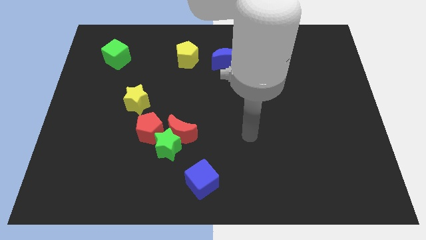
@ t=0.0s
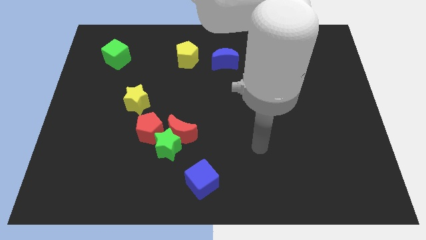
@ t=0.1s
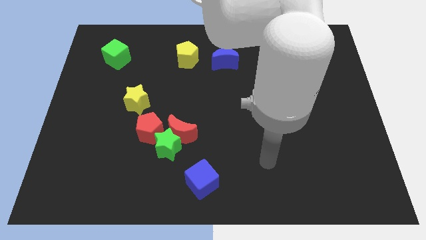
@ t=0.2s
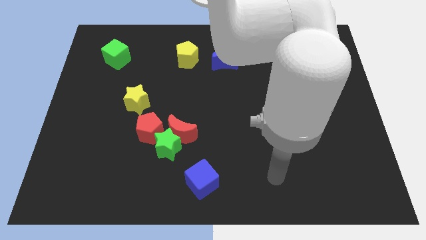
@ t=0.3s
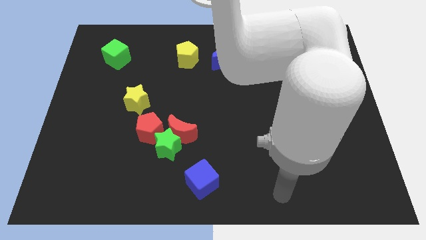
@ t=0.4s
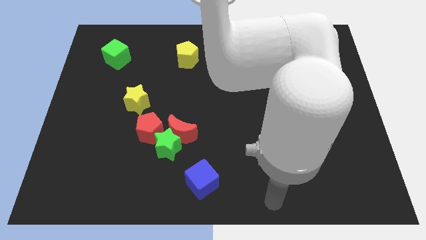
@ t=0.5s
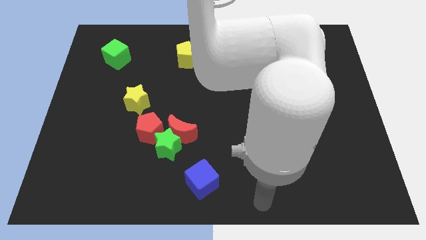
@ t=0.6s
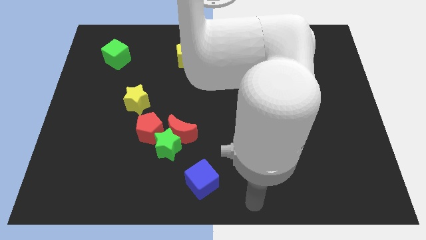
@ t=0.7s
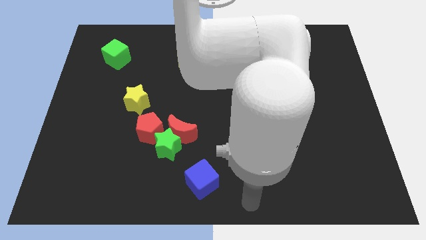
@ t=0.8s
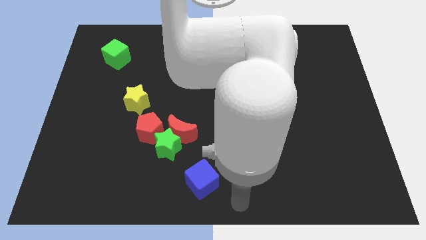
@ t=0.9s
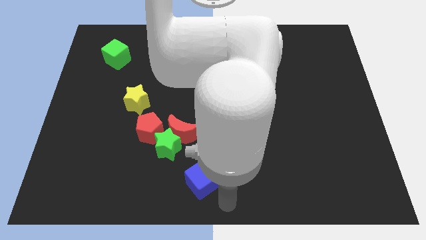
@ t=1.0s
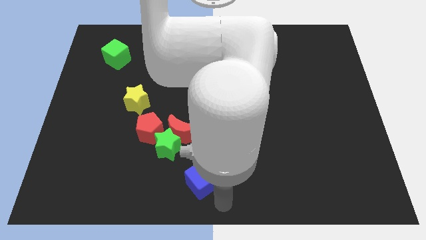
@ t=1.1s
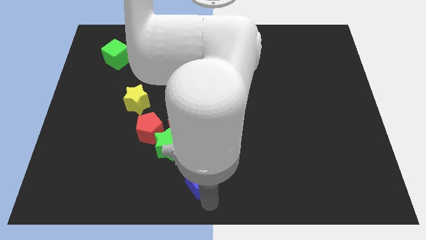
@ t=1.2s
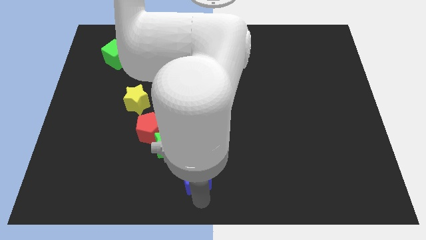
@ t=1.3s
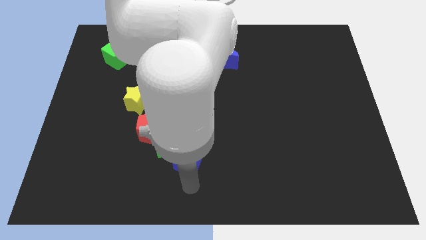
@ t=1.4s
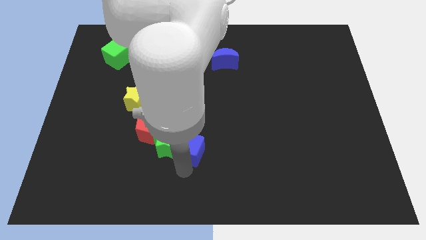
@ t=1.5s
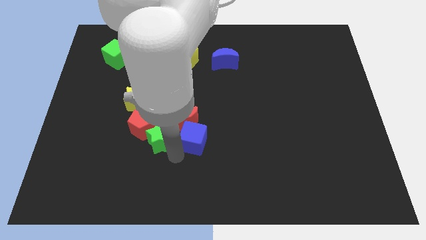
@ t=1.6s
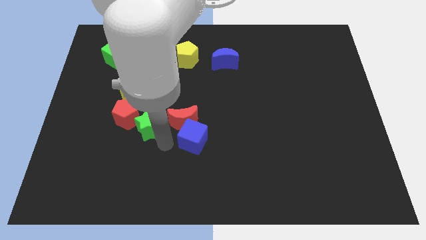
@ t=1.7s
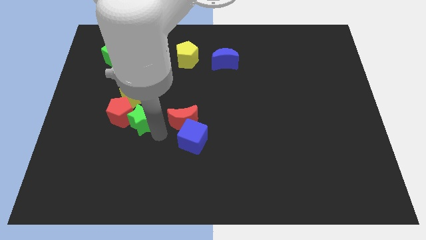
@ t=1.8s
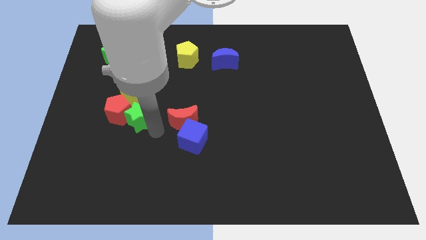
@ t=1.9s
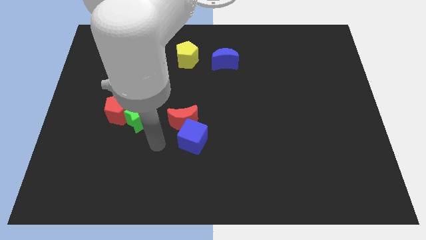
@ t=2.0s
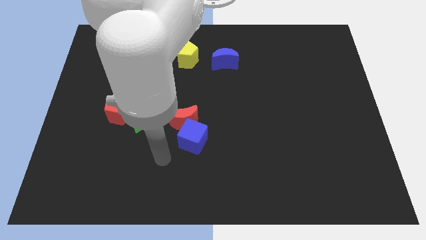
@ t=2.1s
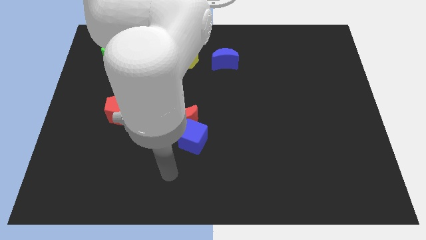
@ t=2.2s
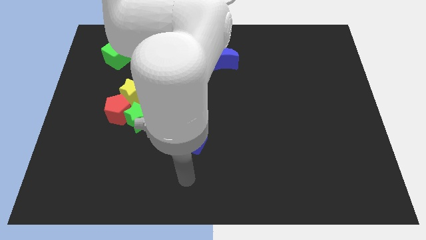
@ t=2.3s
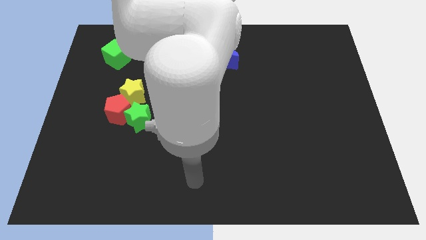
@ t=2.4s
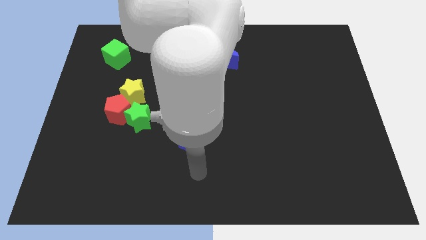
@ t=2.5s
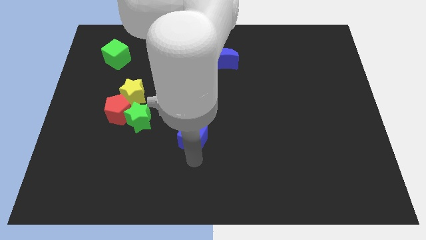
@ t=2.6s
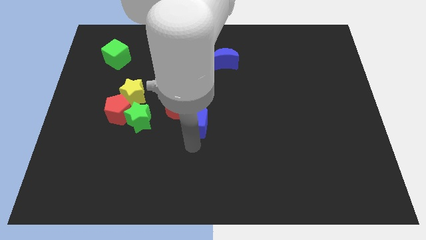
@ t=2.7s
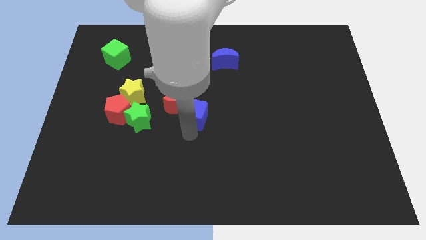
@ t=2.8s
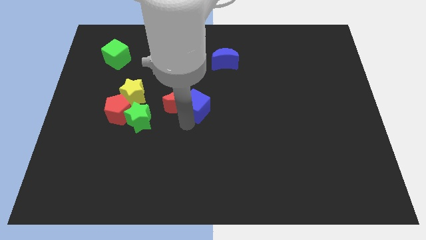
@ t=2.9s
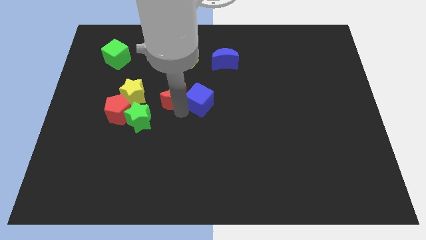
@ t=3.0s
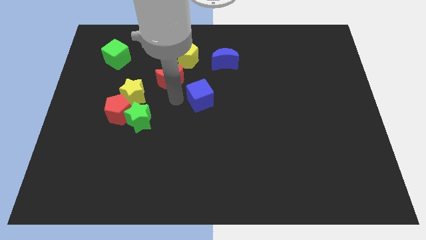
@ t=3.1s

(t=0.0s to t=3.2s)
move the blue cube towards the center of the board

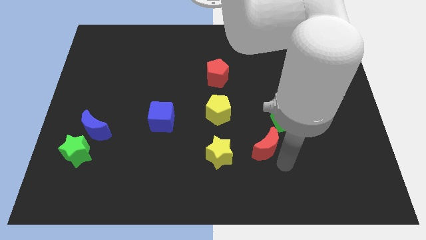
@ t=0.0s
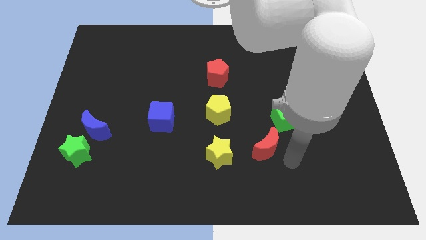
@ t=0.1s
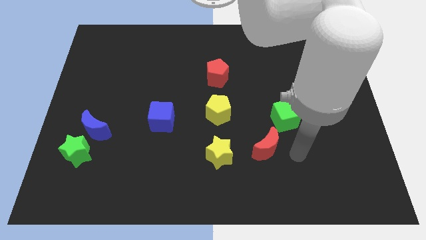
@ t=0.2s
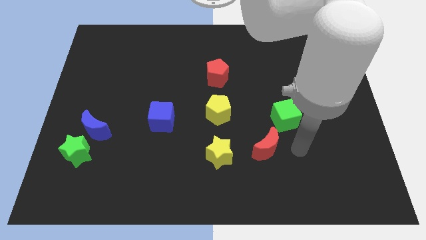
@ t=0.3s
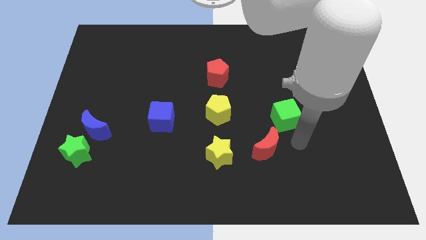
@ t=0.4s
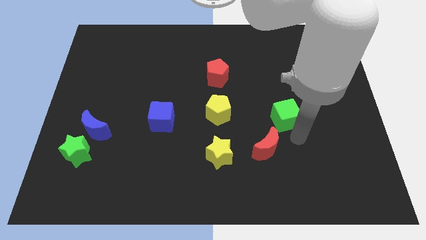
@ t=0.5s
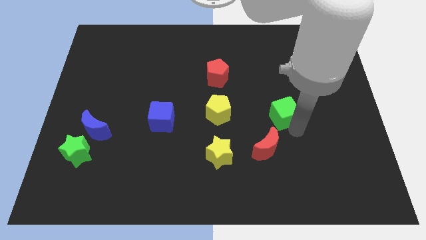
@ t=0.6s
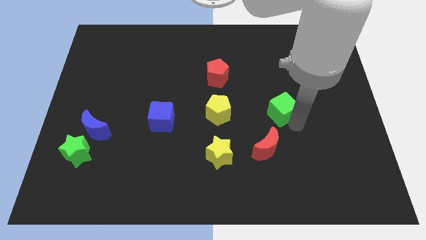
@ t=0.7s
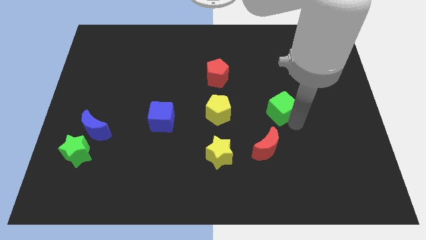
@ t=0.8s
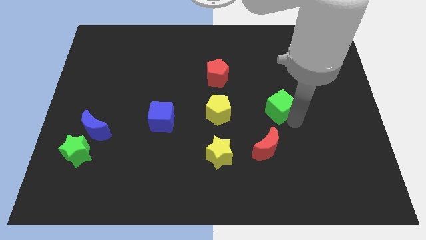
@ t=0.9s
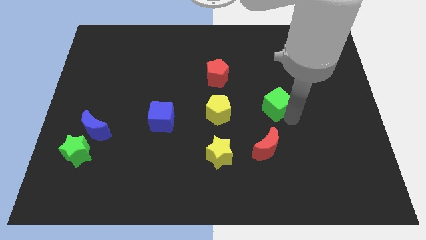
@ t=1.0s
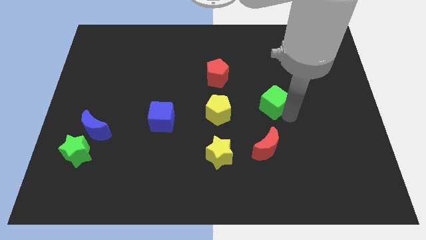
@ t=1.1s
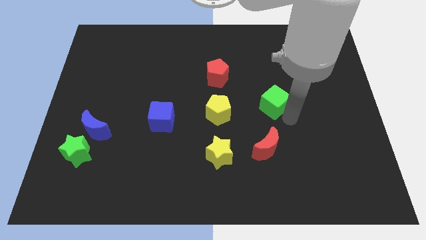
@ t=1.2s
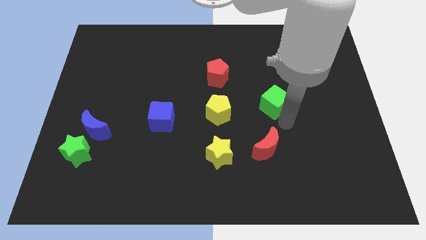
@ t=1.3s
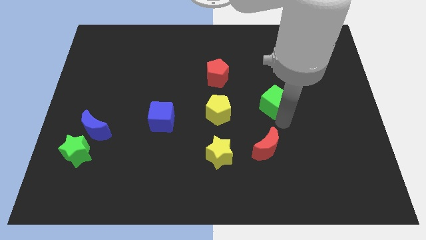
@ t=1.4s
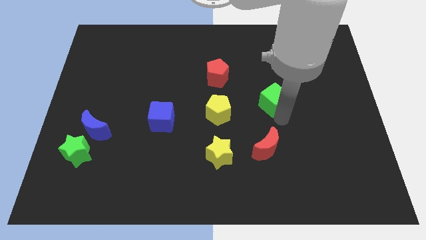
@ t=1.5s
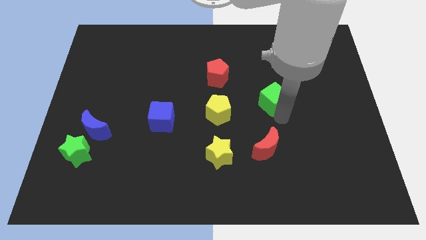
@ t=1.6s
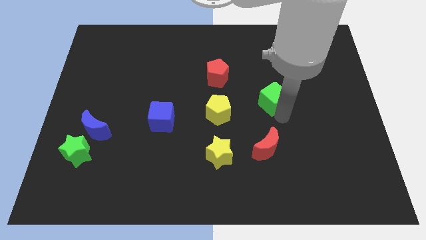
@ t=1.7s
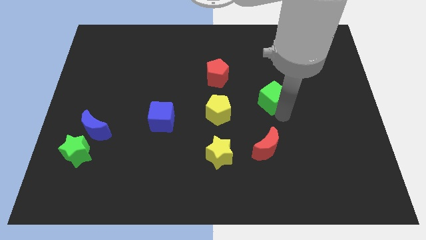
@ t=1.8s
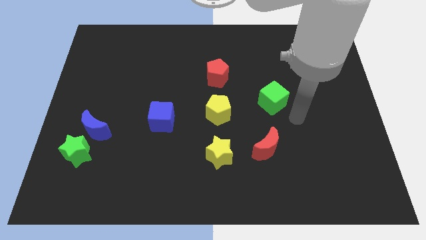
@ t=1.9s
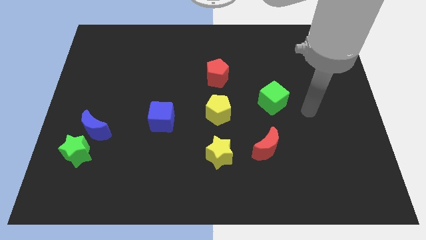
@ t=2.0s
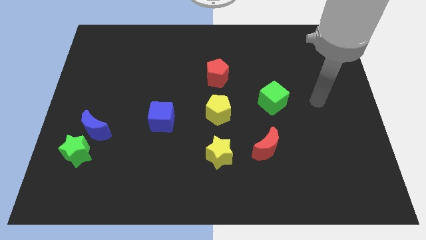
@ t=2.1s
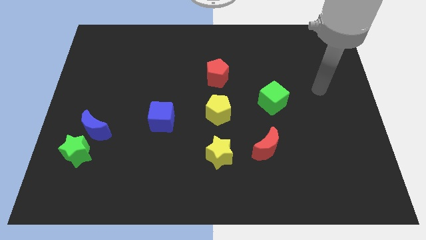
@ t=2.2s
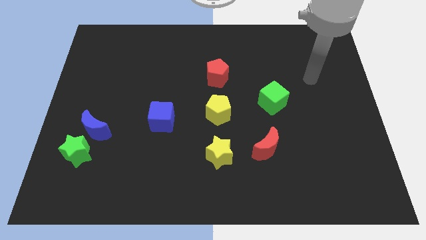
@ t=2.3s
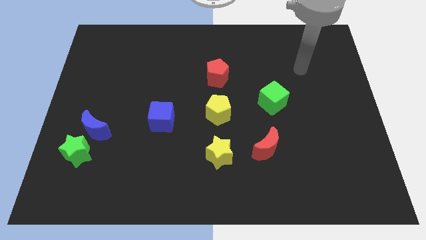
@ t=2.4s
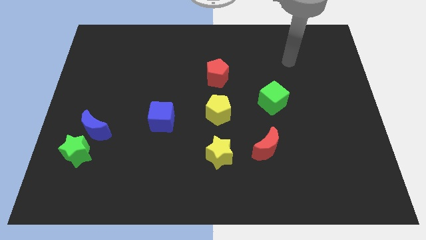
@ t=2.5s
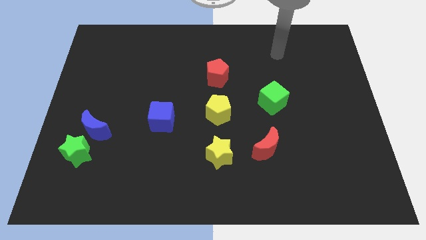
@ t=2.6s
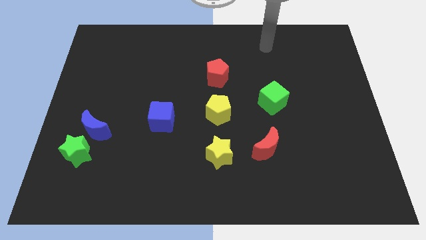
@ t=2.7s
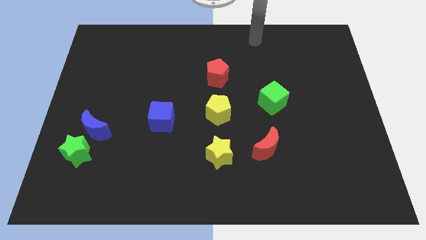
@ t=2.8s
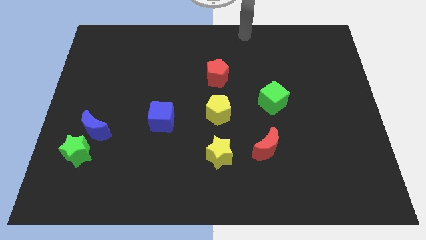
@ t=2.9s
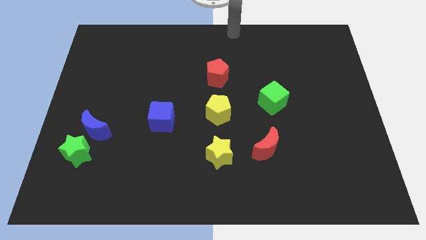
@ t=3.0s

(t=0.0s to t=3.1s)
move away from the green cube by pushing upwards

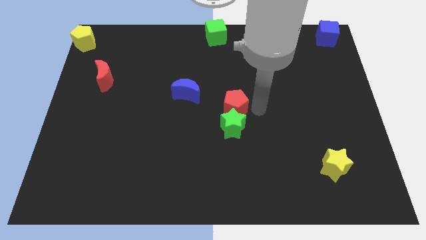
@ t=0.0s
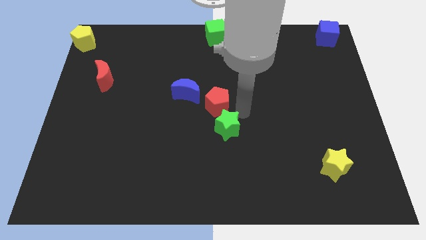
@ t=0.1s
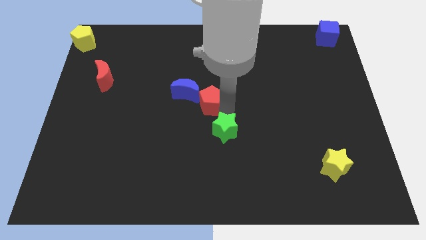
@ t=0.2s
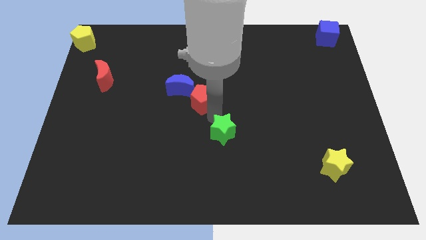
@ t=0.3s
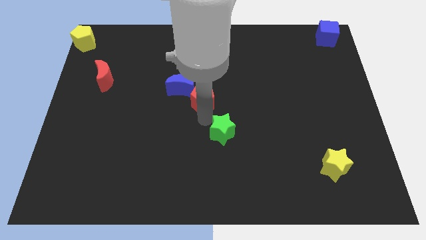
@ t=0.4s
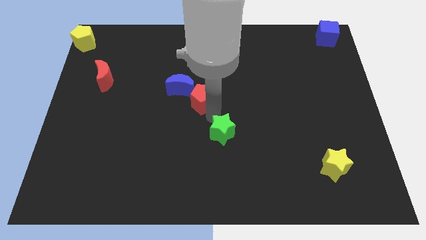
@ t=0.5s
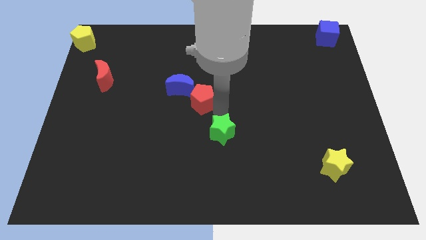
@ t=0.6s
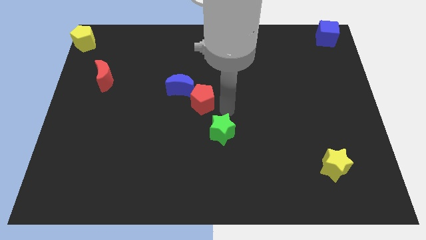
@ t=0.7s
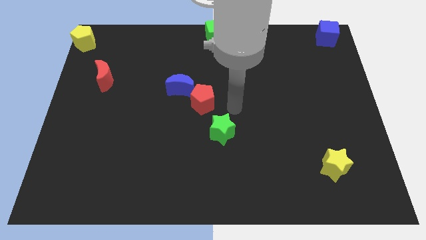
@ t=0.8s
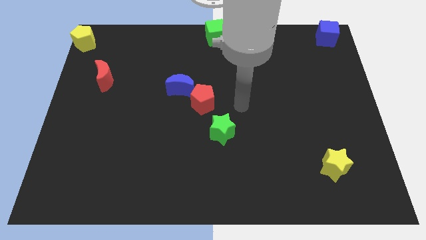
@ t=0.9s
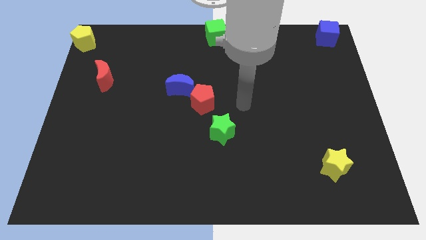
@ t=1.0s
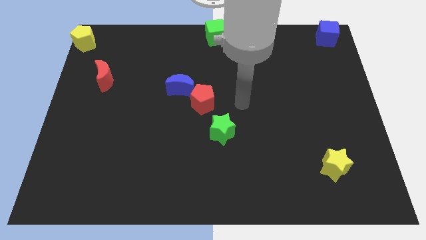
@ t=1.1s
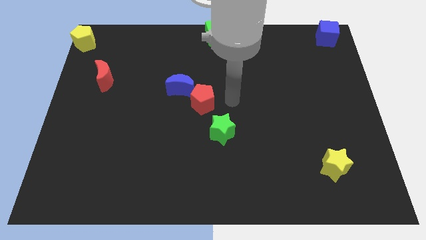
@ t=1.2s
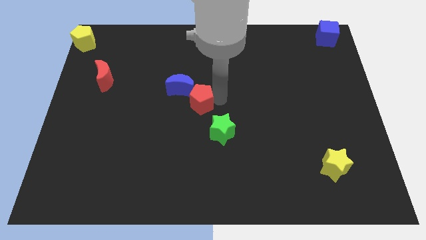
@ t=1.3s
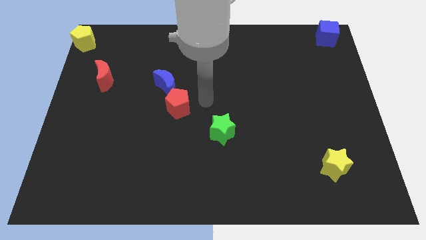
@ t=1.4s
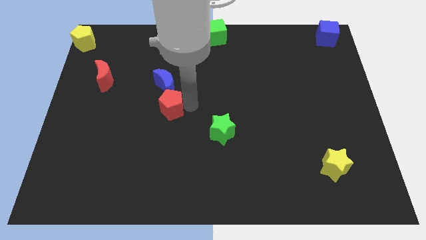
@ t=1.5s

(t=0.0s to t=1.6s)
separate green star and the red pentagon

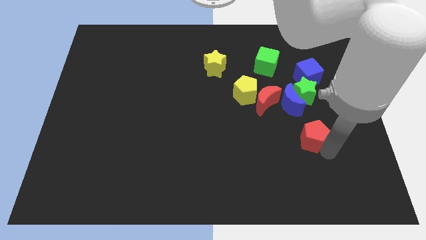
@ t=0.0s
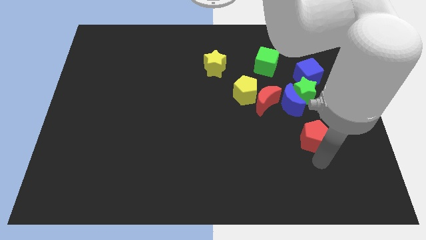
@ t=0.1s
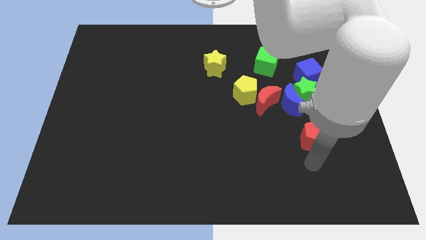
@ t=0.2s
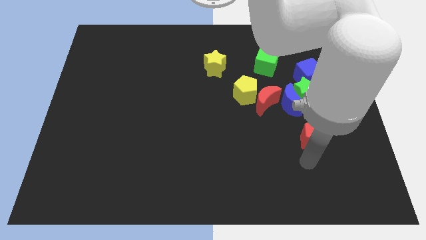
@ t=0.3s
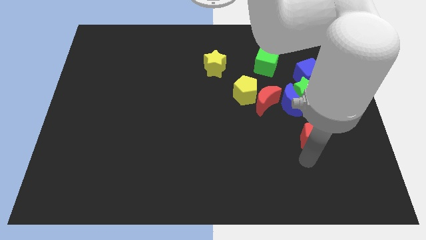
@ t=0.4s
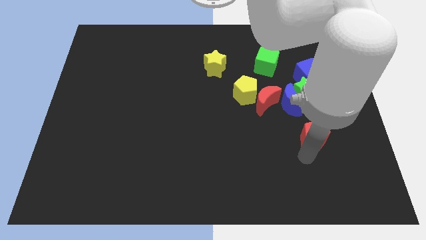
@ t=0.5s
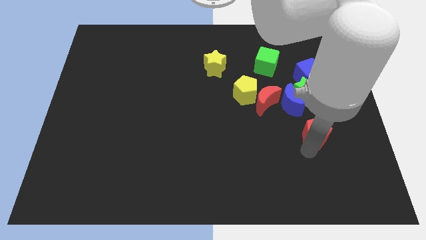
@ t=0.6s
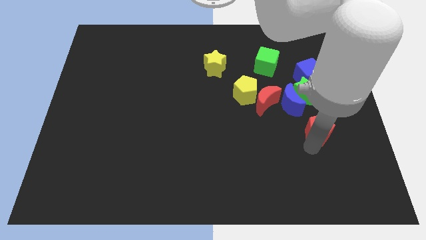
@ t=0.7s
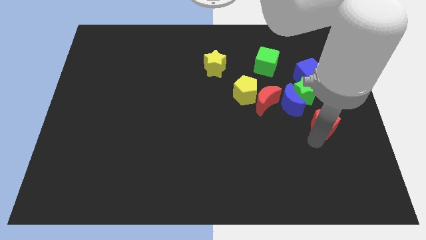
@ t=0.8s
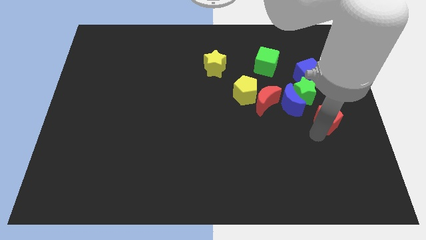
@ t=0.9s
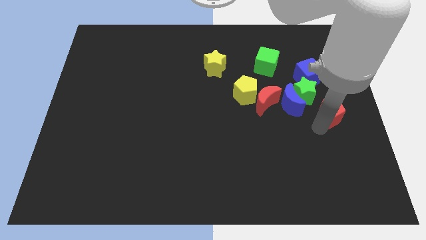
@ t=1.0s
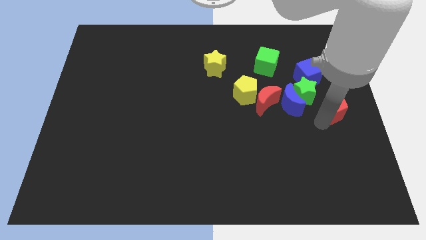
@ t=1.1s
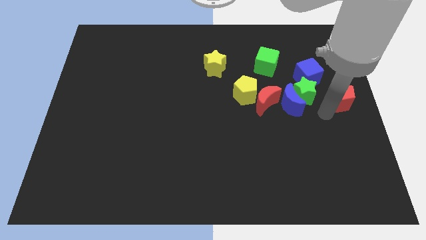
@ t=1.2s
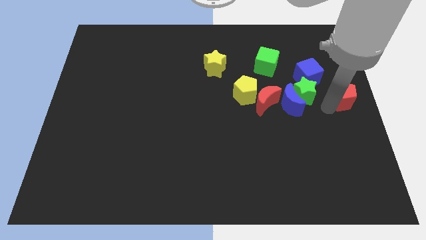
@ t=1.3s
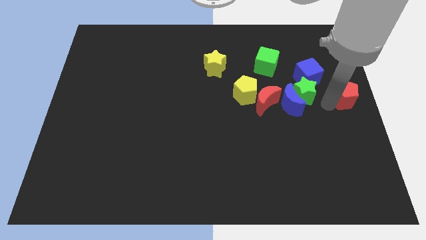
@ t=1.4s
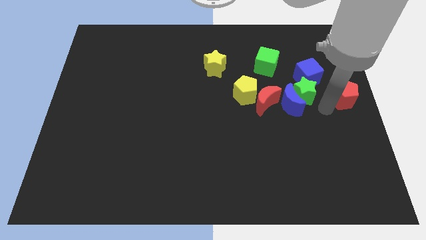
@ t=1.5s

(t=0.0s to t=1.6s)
place the red pentagon to the right of the green star
